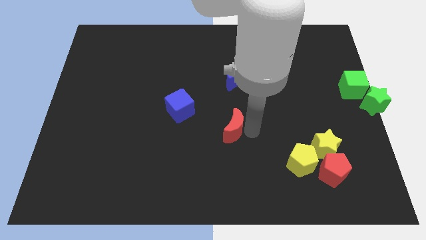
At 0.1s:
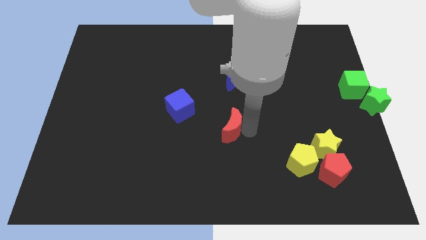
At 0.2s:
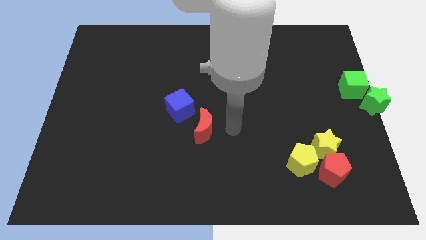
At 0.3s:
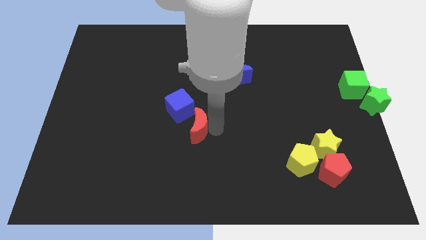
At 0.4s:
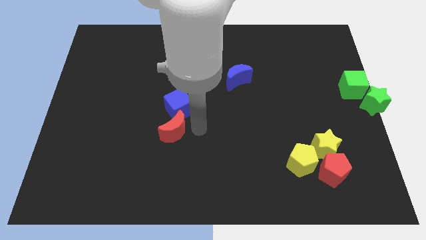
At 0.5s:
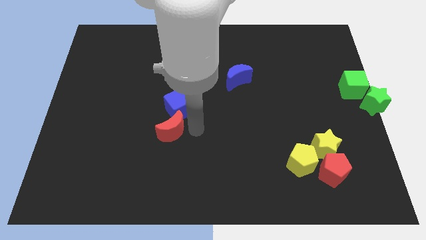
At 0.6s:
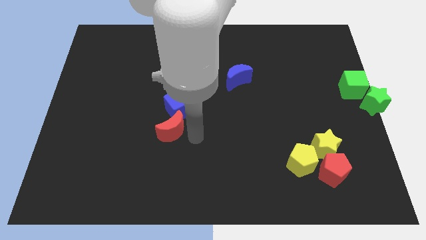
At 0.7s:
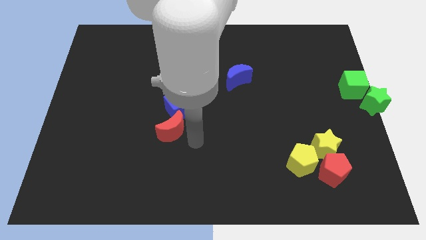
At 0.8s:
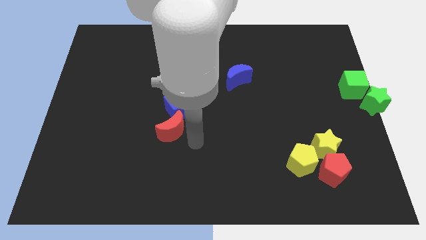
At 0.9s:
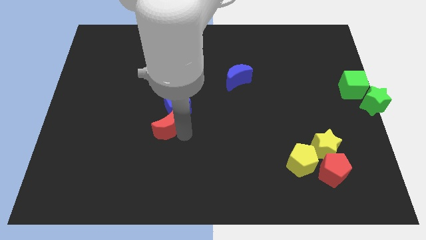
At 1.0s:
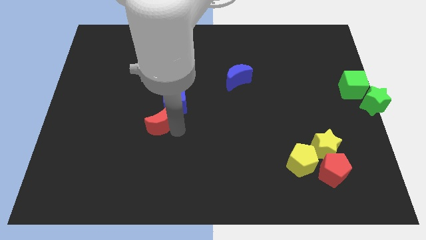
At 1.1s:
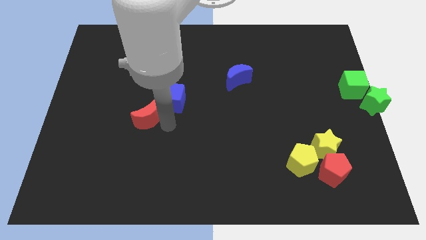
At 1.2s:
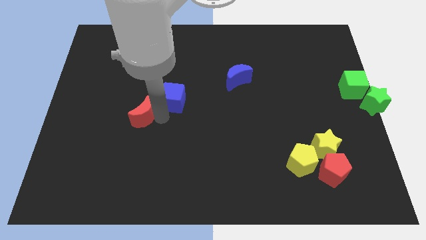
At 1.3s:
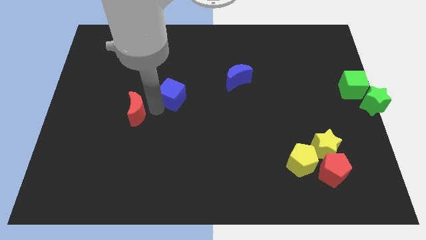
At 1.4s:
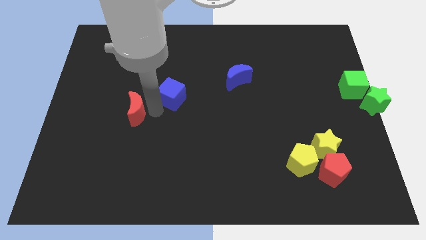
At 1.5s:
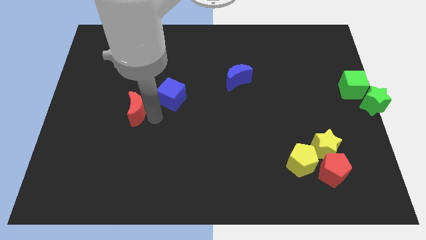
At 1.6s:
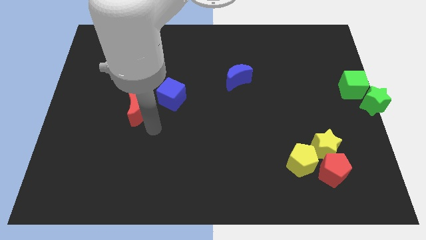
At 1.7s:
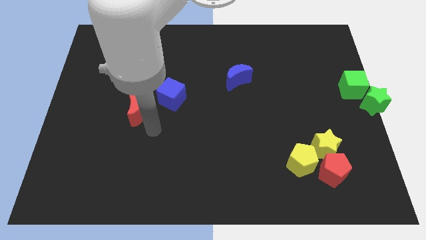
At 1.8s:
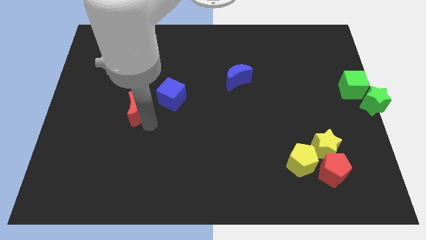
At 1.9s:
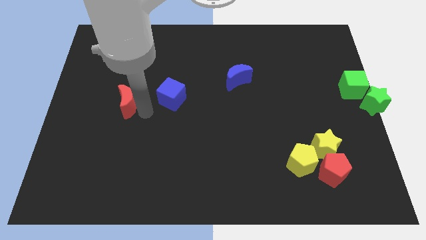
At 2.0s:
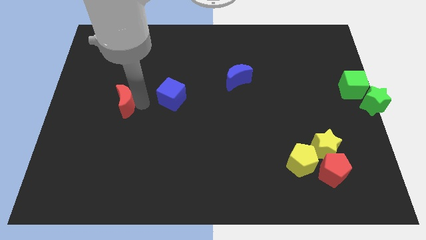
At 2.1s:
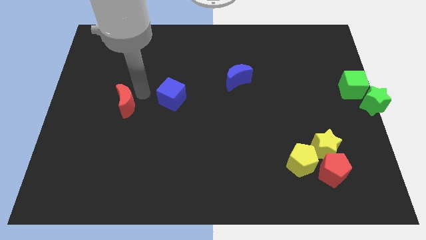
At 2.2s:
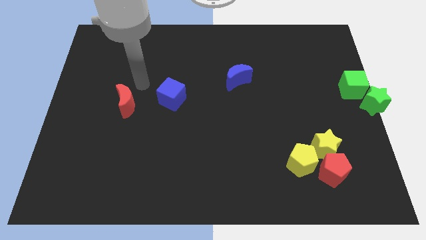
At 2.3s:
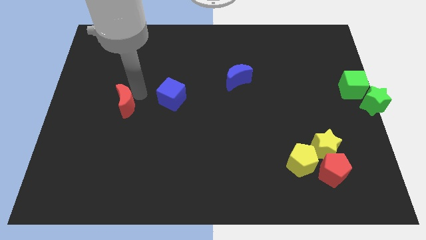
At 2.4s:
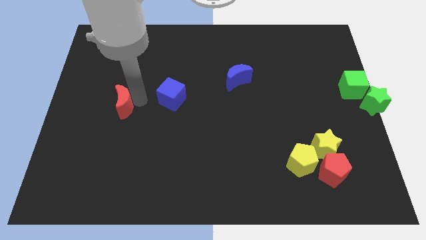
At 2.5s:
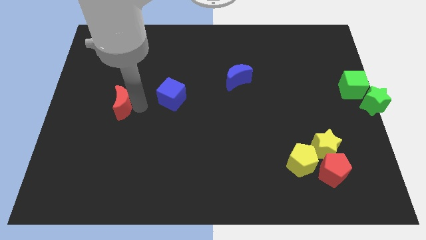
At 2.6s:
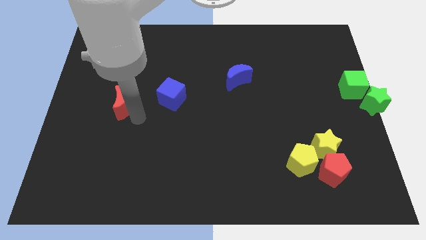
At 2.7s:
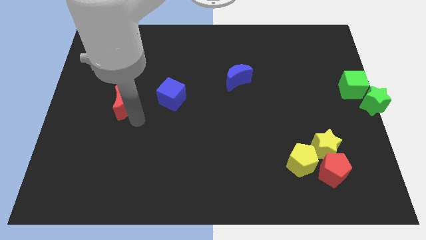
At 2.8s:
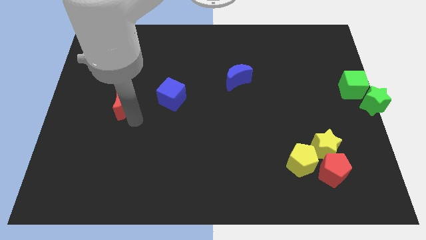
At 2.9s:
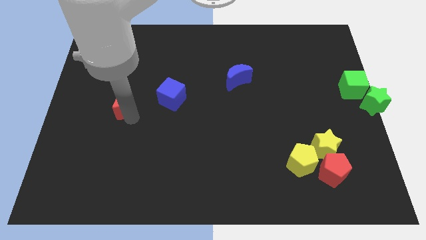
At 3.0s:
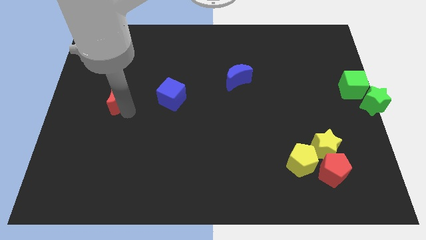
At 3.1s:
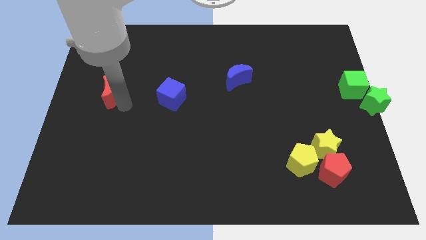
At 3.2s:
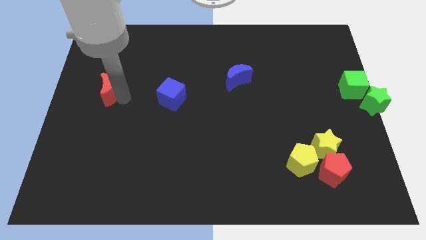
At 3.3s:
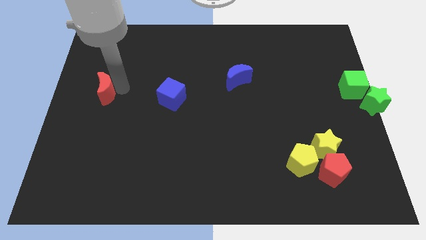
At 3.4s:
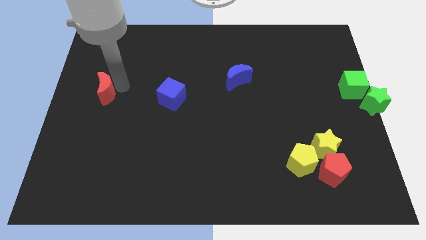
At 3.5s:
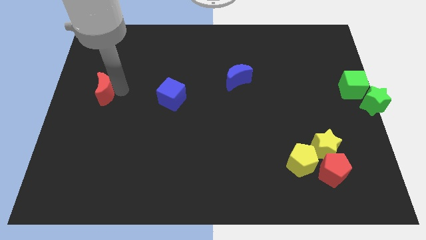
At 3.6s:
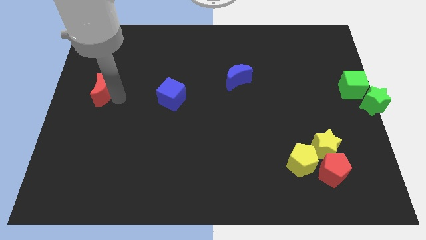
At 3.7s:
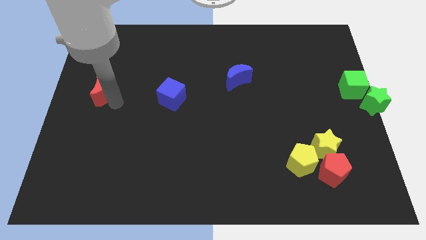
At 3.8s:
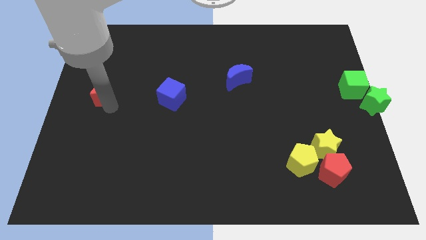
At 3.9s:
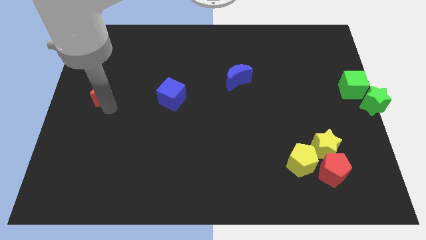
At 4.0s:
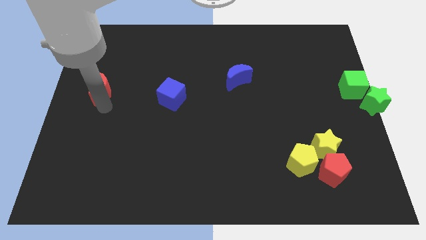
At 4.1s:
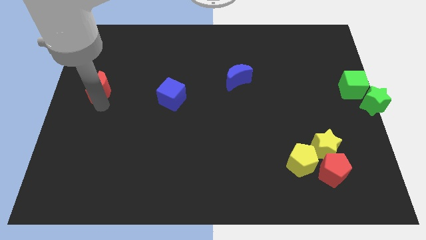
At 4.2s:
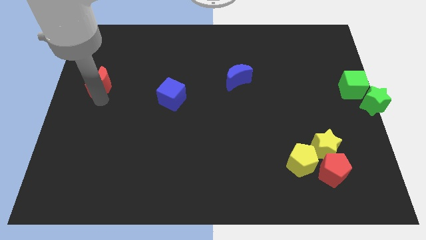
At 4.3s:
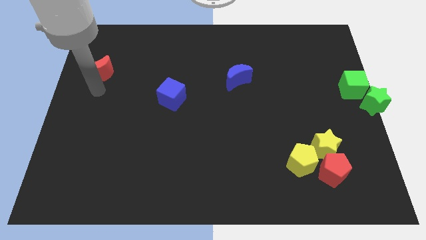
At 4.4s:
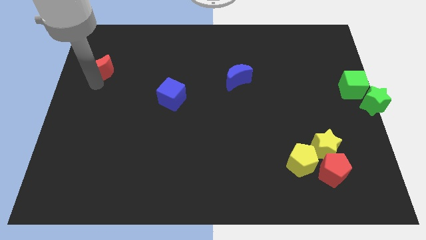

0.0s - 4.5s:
move red moon diagonally left above blue cube

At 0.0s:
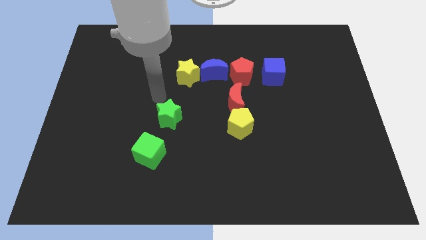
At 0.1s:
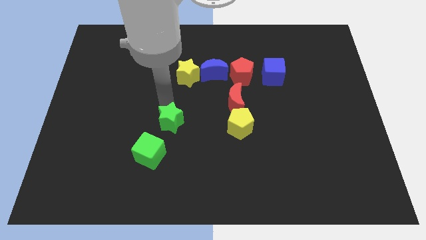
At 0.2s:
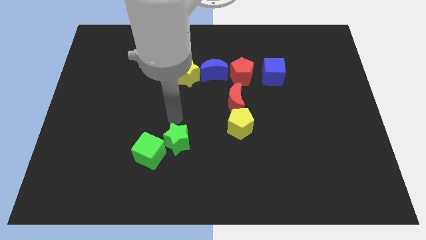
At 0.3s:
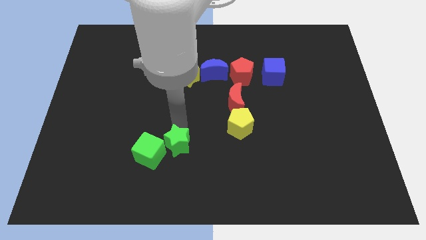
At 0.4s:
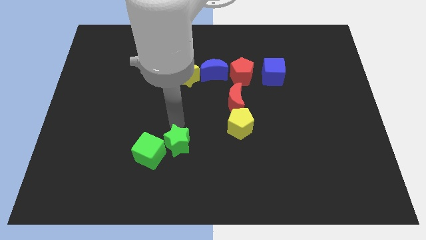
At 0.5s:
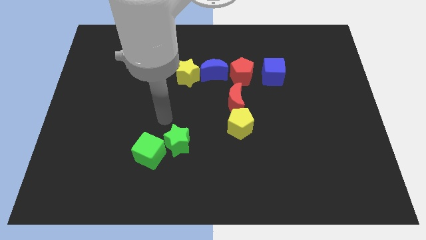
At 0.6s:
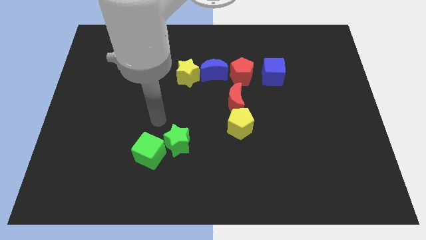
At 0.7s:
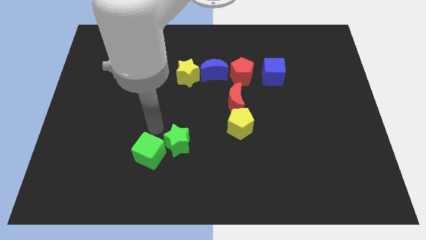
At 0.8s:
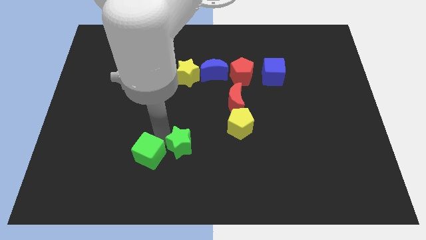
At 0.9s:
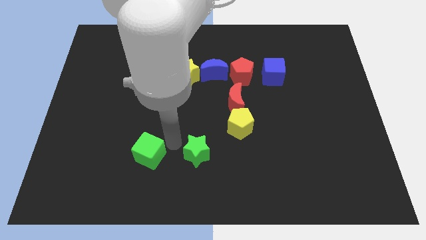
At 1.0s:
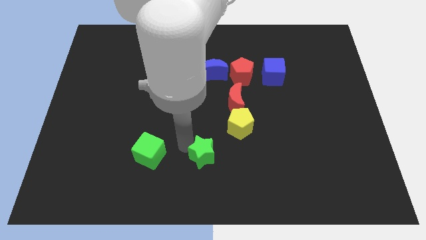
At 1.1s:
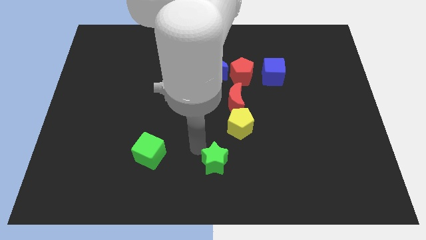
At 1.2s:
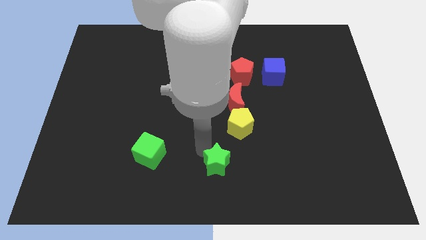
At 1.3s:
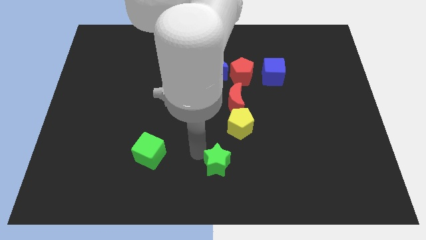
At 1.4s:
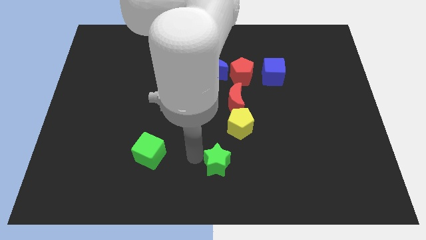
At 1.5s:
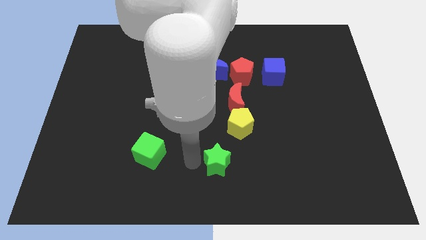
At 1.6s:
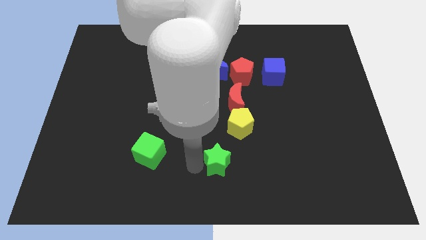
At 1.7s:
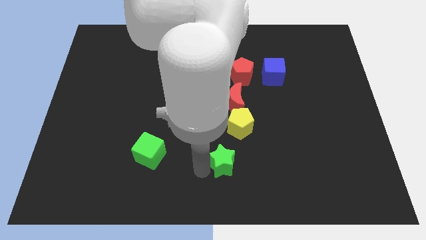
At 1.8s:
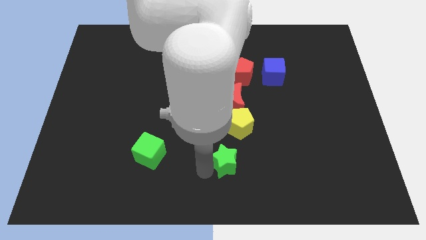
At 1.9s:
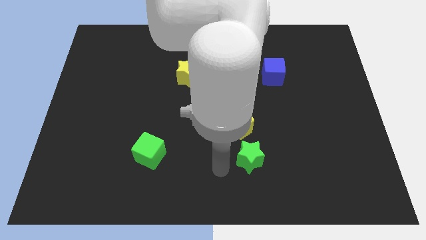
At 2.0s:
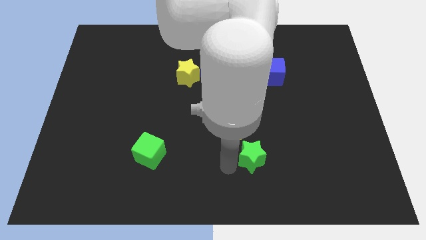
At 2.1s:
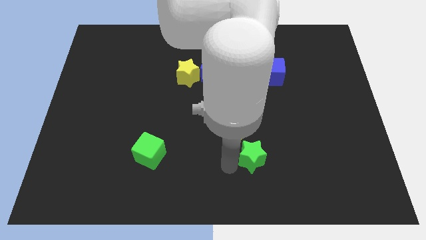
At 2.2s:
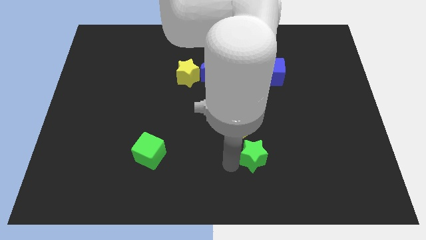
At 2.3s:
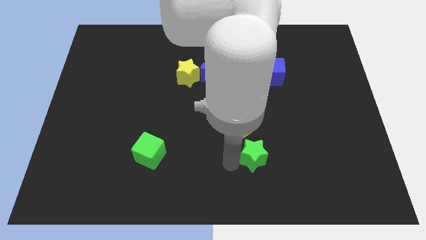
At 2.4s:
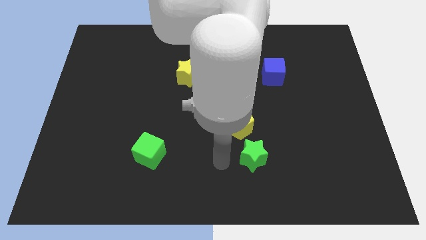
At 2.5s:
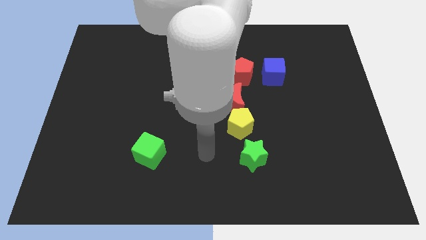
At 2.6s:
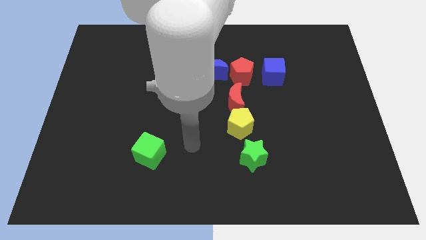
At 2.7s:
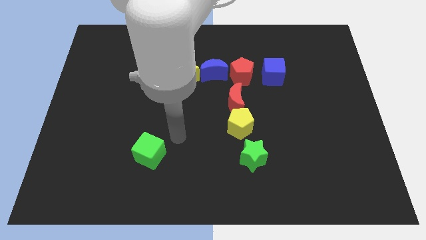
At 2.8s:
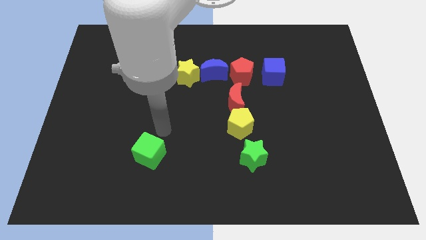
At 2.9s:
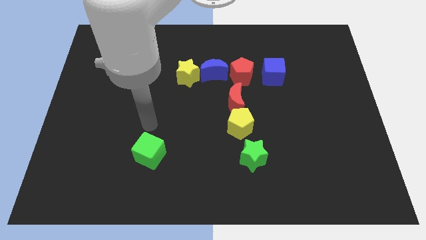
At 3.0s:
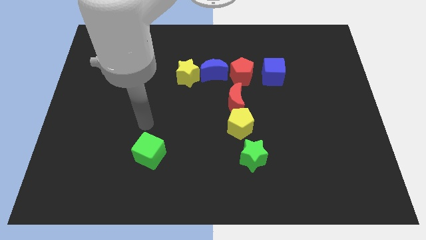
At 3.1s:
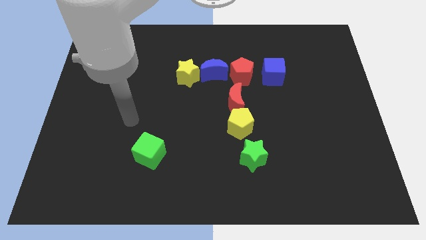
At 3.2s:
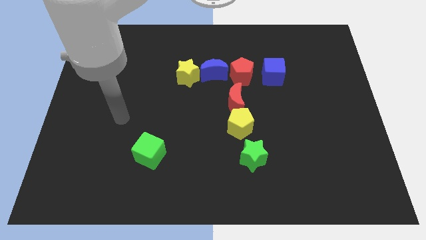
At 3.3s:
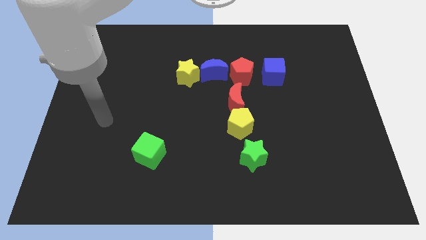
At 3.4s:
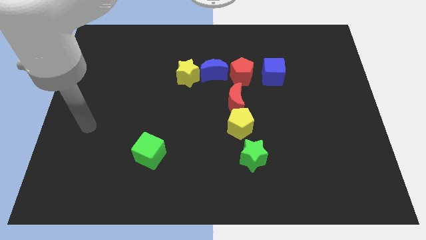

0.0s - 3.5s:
place the green star below the yellow pentagon

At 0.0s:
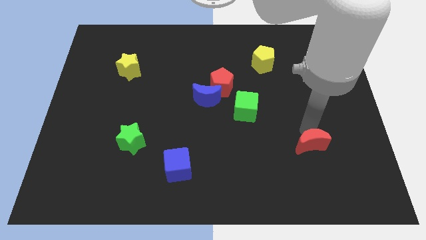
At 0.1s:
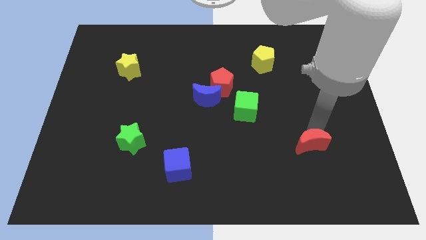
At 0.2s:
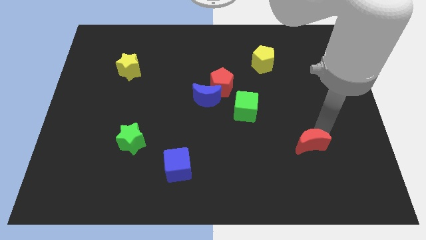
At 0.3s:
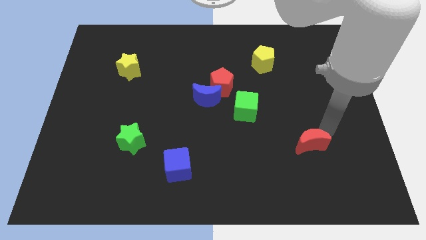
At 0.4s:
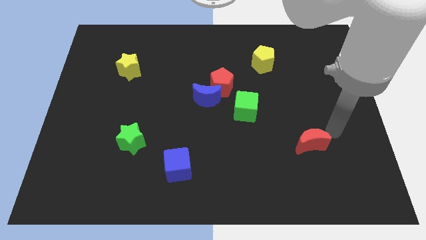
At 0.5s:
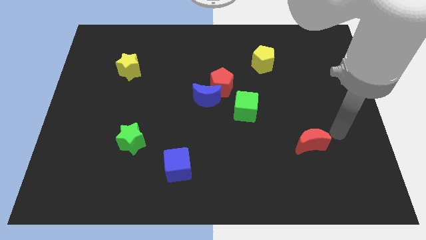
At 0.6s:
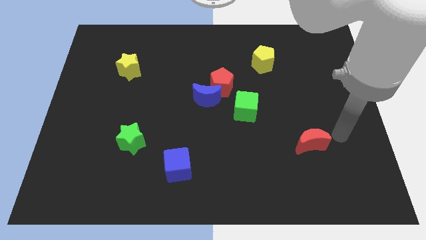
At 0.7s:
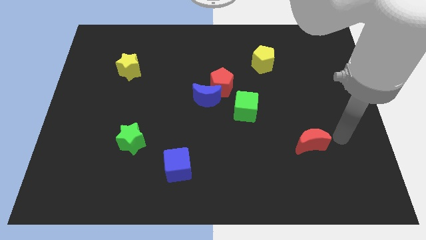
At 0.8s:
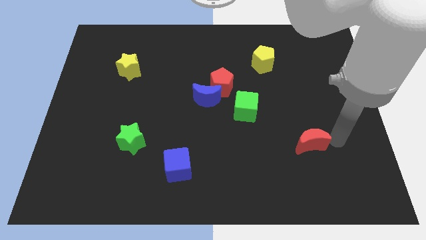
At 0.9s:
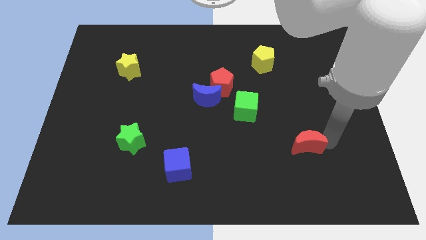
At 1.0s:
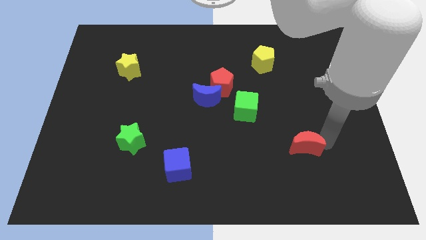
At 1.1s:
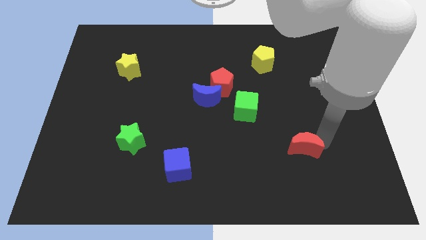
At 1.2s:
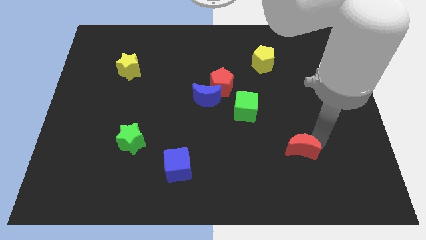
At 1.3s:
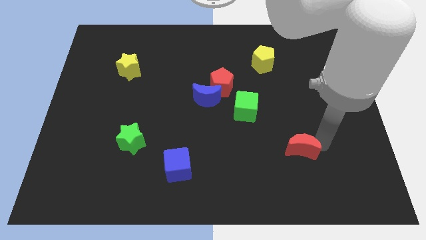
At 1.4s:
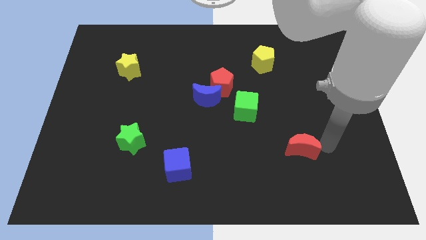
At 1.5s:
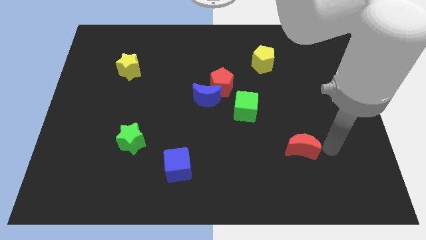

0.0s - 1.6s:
move the red moon slightly towards the left
